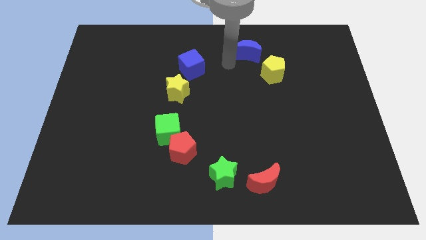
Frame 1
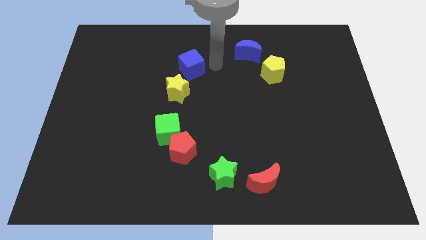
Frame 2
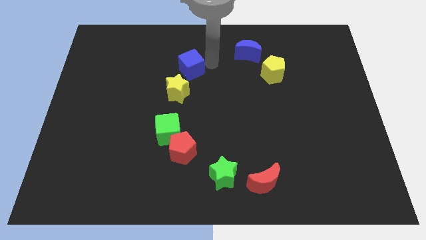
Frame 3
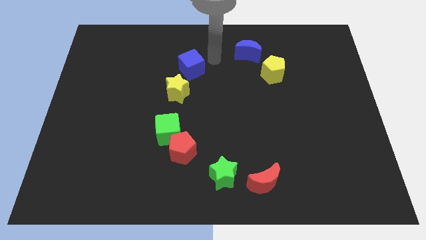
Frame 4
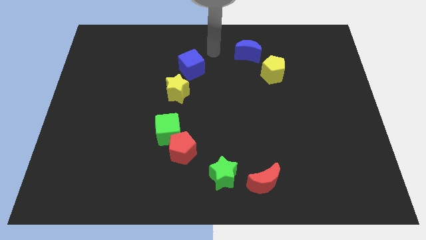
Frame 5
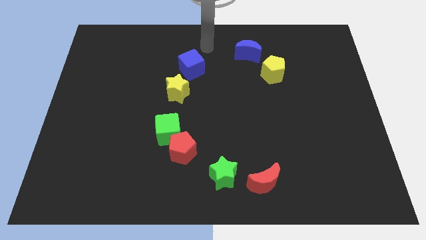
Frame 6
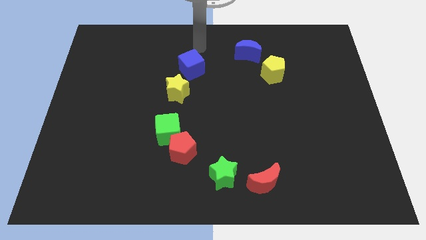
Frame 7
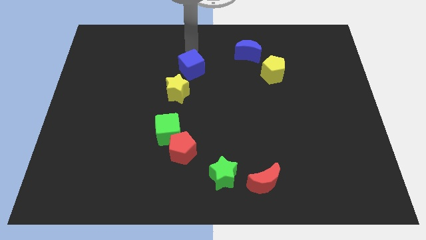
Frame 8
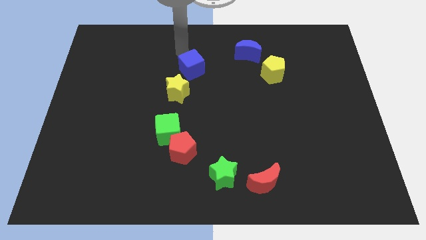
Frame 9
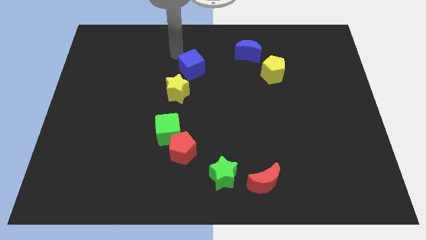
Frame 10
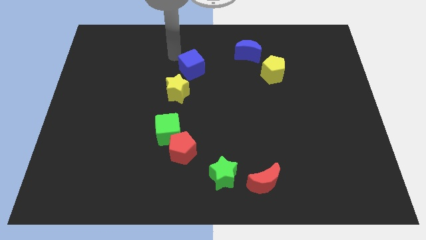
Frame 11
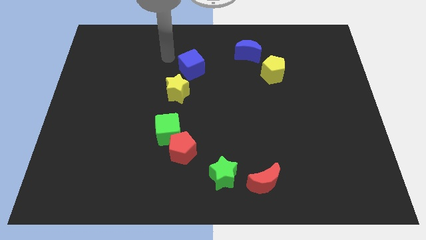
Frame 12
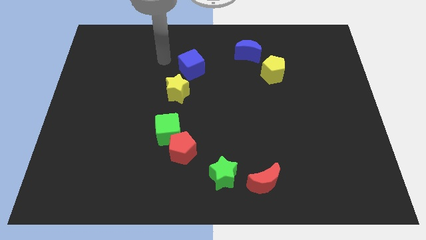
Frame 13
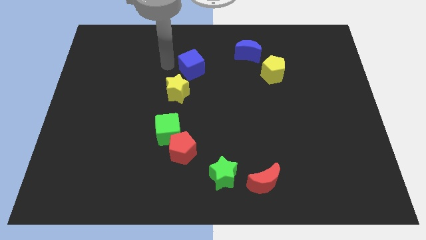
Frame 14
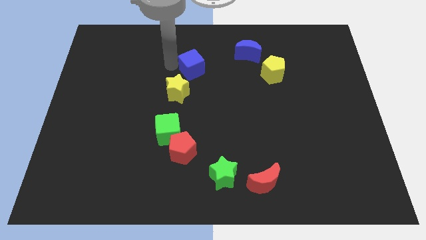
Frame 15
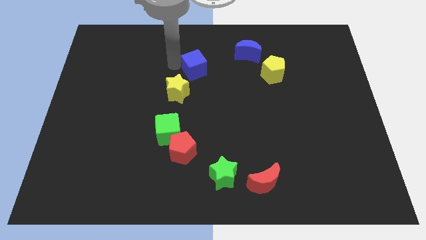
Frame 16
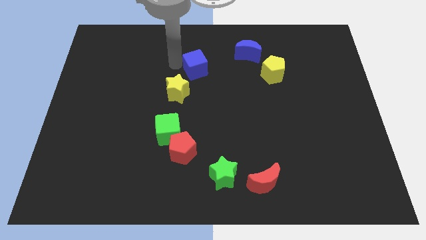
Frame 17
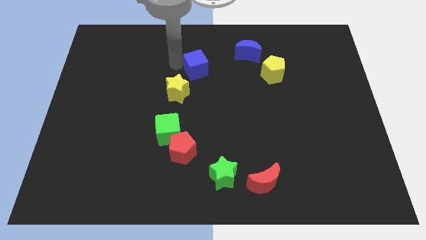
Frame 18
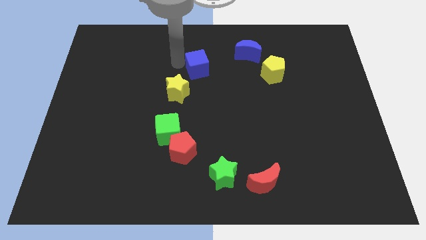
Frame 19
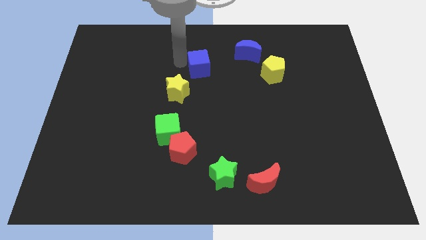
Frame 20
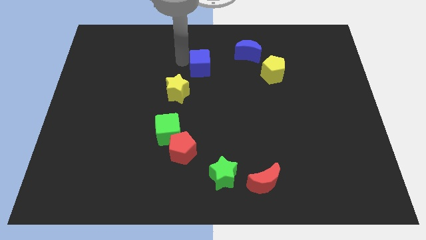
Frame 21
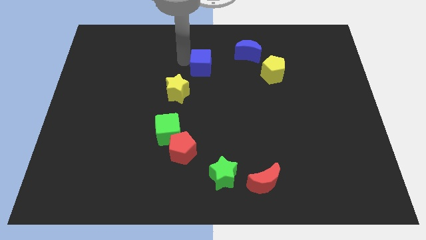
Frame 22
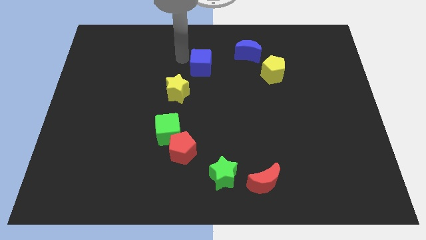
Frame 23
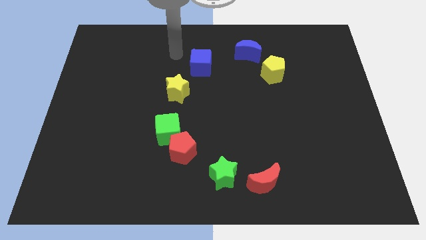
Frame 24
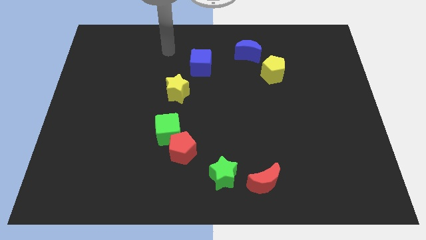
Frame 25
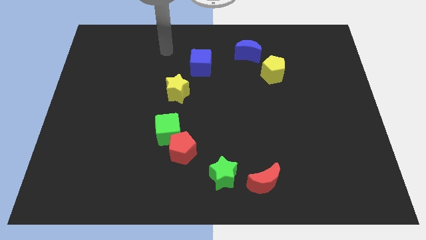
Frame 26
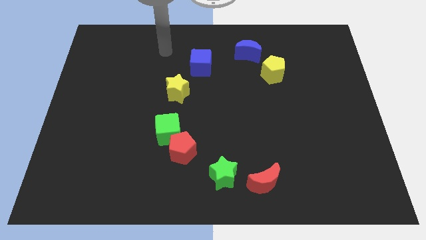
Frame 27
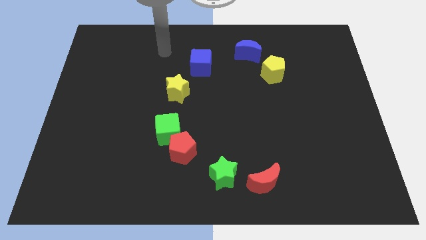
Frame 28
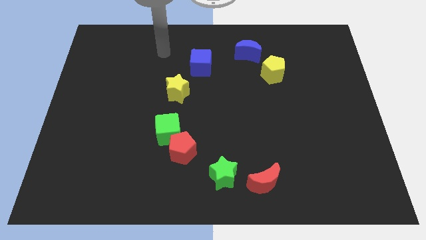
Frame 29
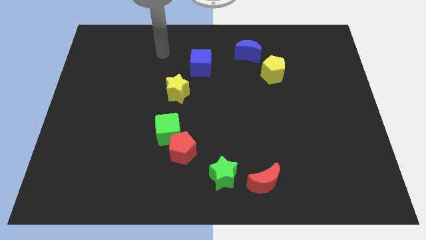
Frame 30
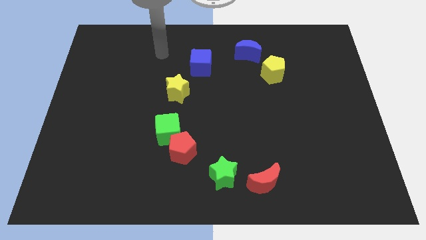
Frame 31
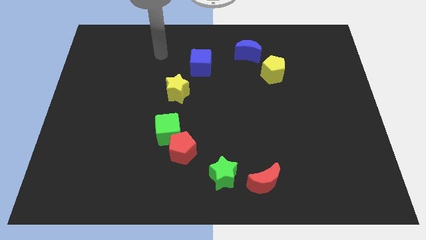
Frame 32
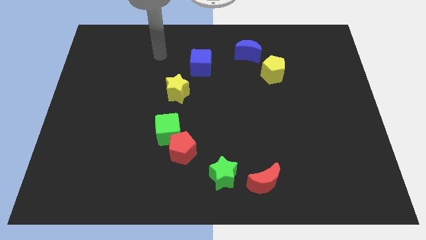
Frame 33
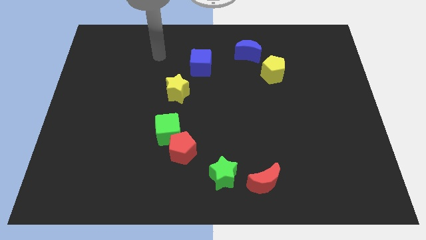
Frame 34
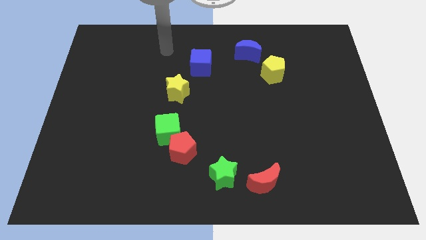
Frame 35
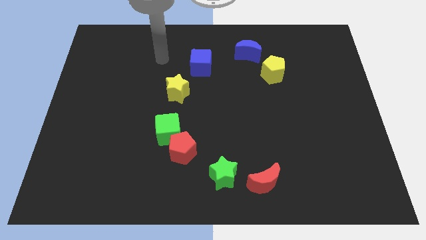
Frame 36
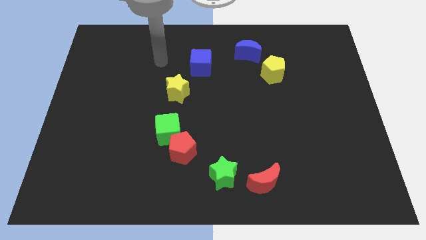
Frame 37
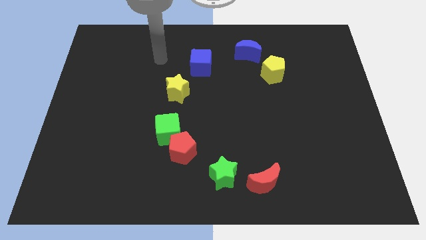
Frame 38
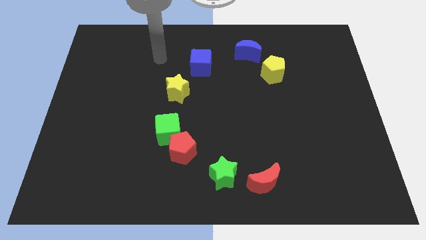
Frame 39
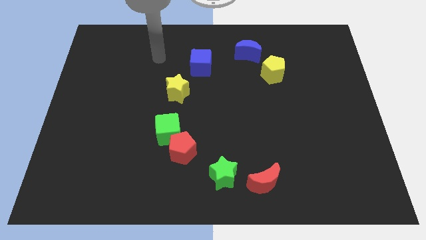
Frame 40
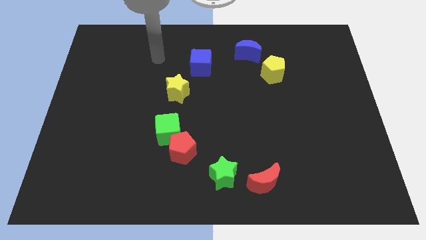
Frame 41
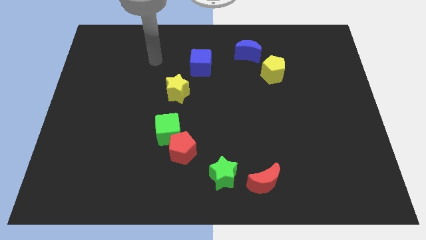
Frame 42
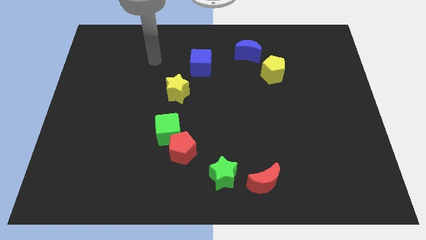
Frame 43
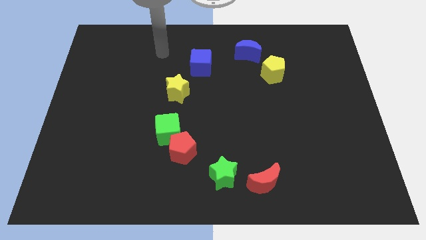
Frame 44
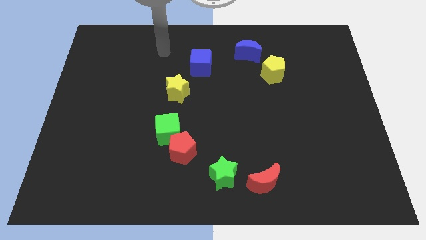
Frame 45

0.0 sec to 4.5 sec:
push the blue cube slightly left

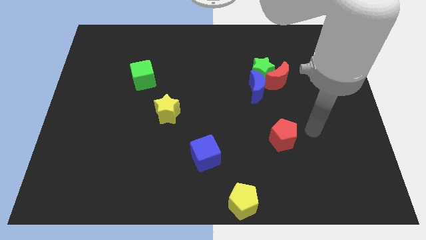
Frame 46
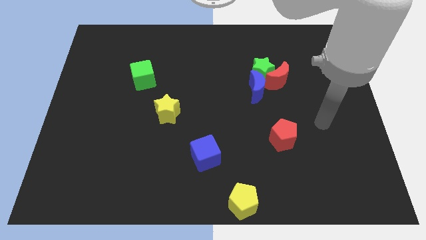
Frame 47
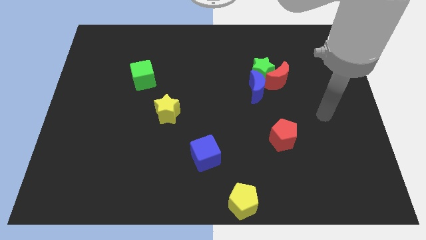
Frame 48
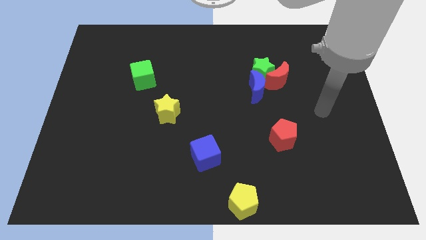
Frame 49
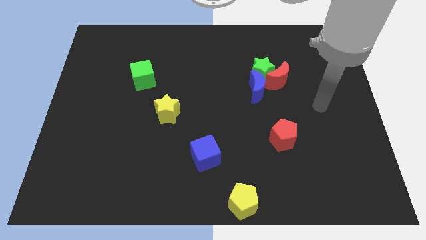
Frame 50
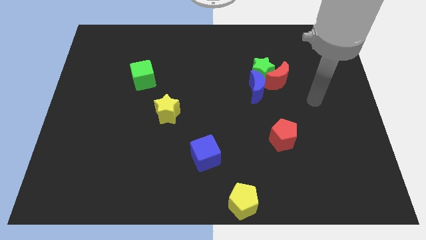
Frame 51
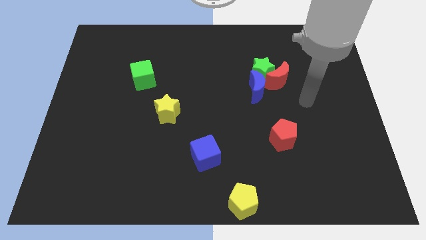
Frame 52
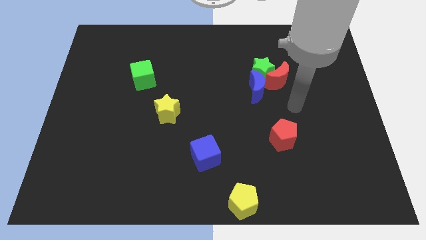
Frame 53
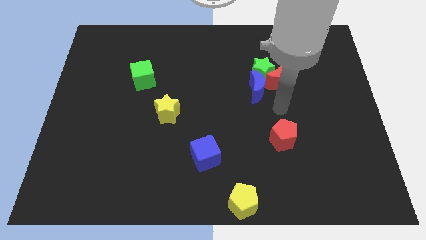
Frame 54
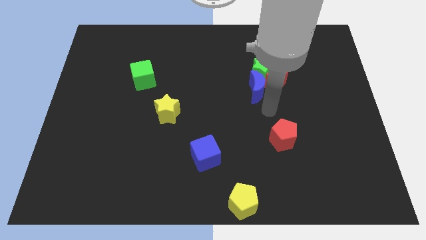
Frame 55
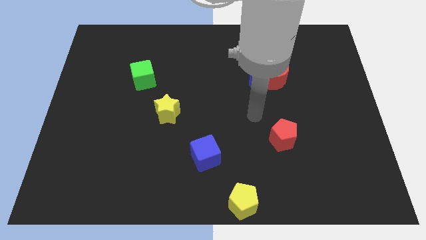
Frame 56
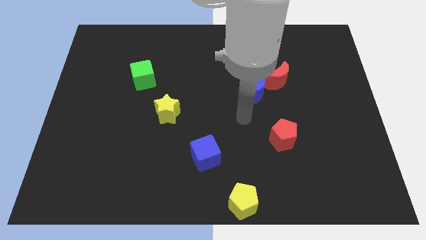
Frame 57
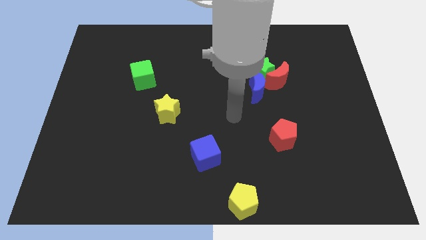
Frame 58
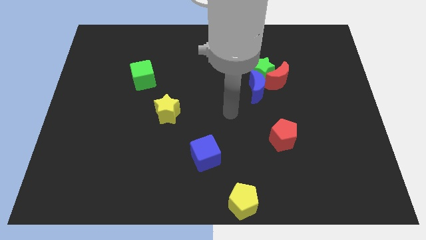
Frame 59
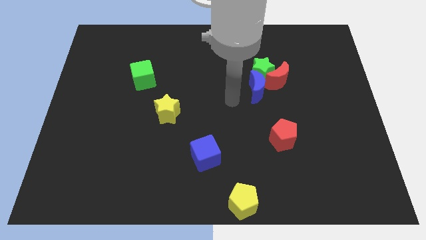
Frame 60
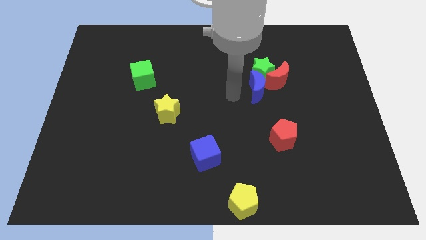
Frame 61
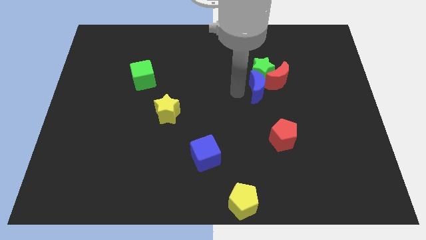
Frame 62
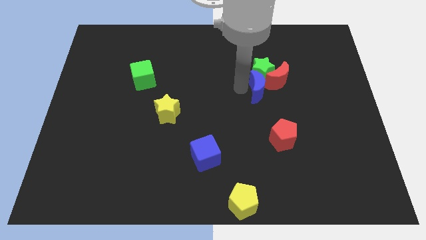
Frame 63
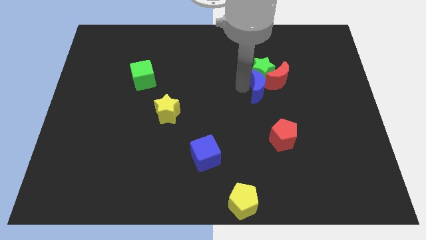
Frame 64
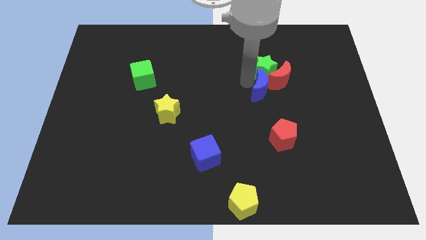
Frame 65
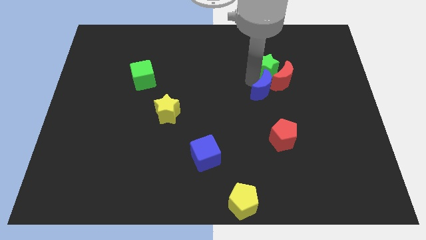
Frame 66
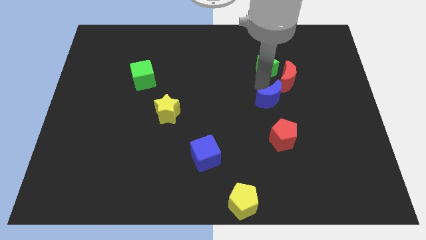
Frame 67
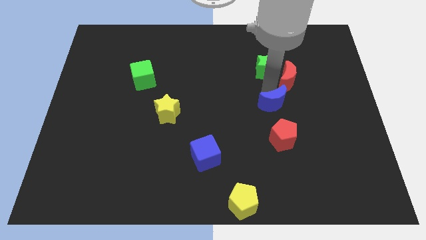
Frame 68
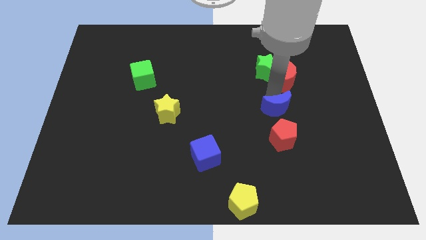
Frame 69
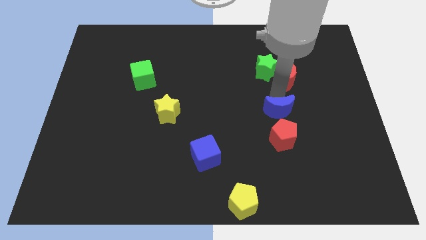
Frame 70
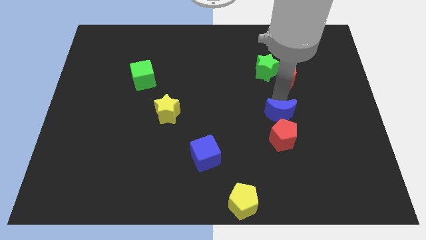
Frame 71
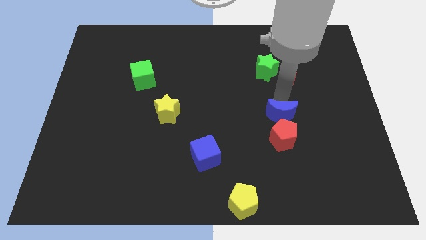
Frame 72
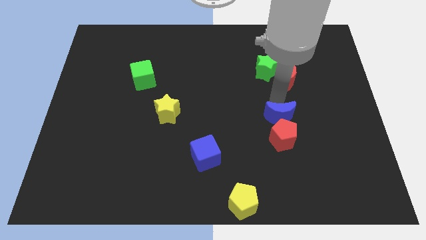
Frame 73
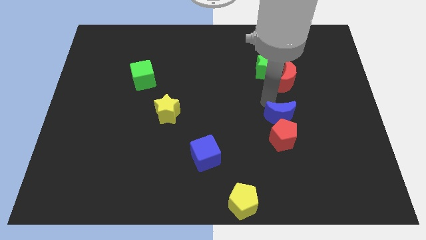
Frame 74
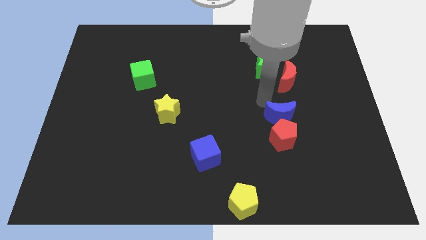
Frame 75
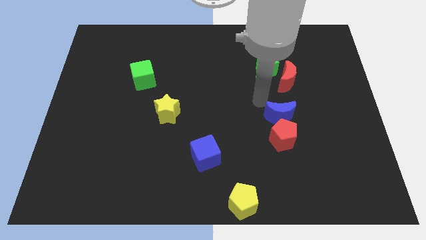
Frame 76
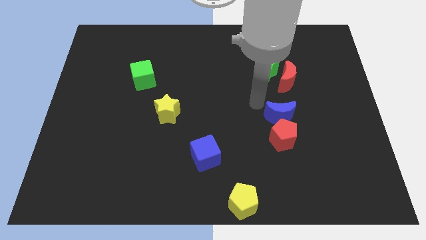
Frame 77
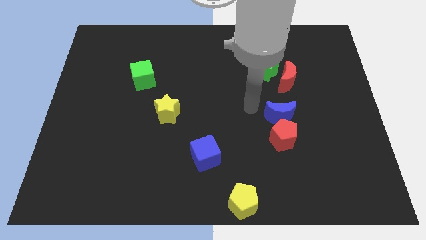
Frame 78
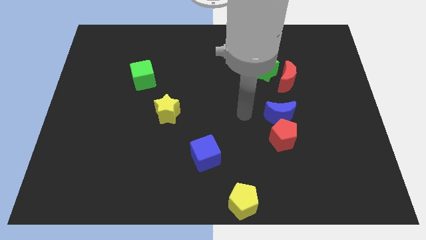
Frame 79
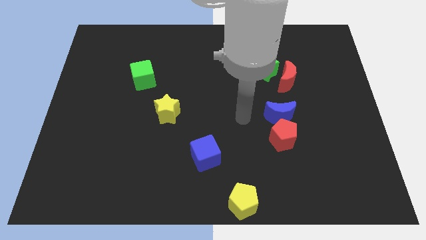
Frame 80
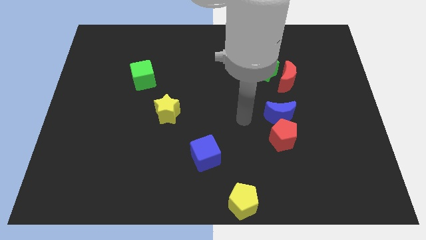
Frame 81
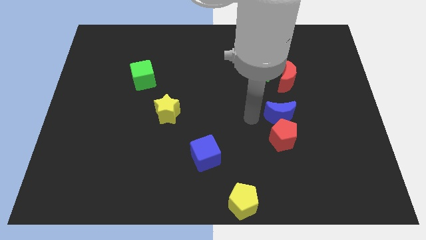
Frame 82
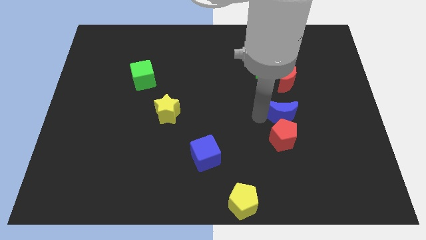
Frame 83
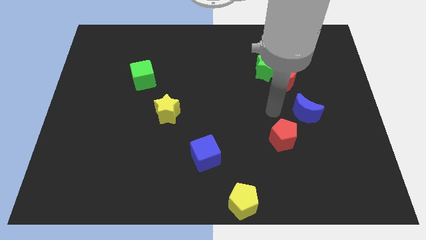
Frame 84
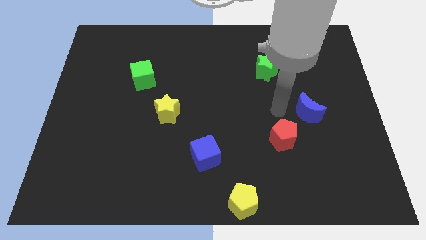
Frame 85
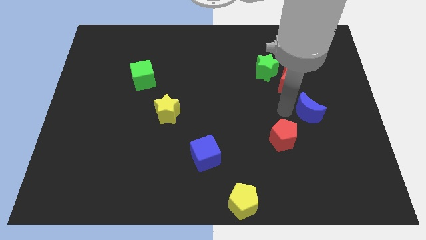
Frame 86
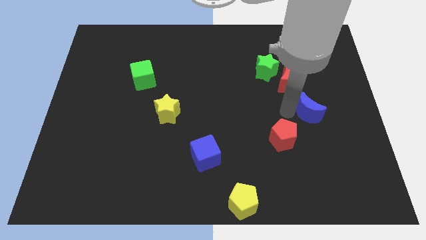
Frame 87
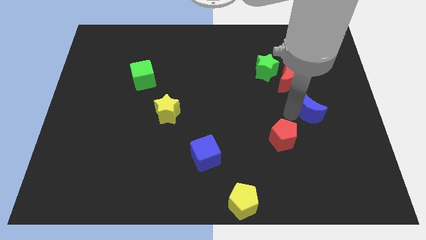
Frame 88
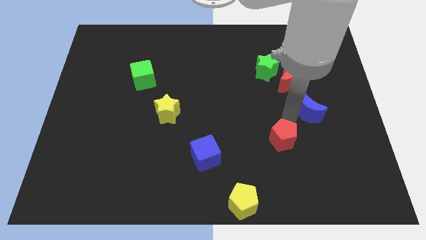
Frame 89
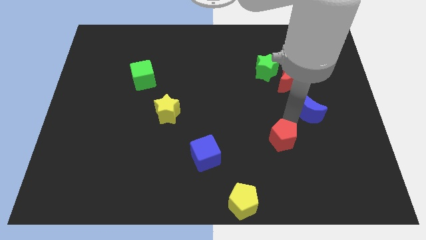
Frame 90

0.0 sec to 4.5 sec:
place the blue crescent horizontally to the right side of the yellow star
